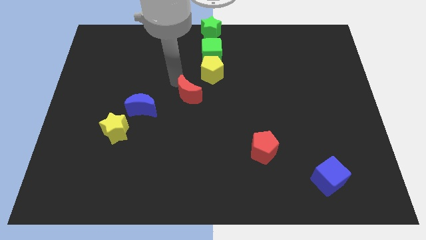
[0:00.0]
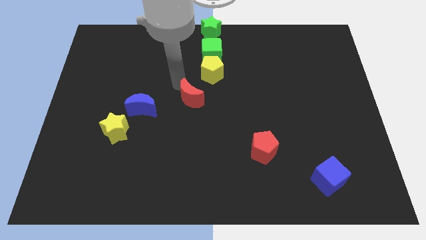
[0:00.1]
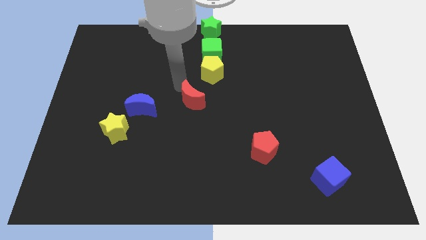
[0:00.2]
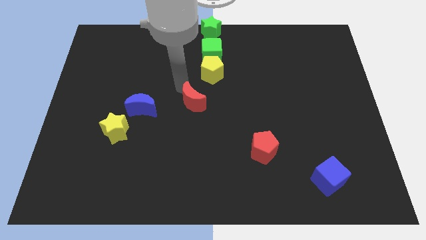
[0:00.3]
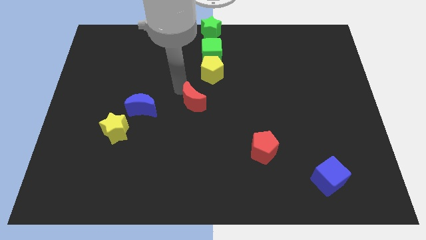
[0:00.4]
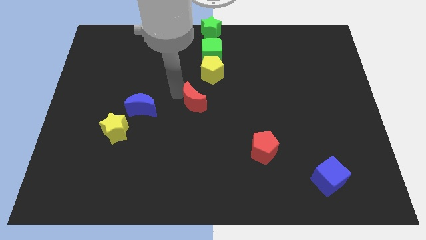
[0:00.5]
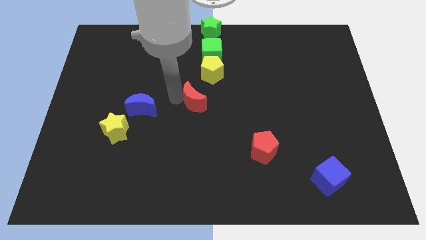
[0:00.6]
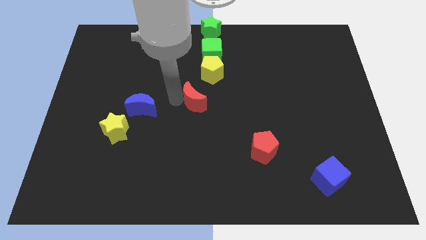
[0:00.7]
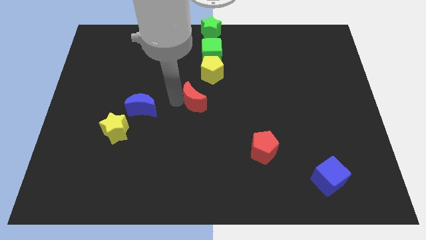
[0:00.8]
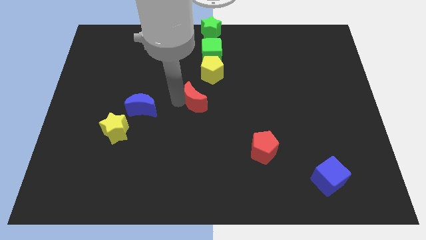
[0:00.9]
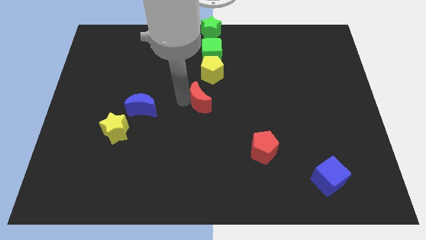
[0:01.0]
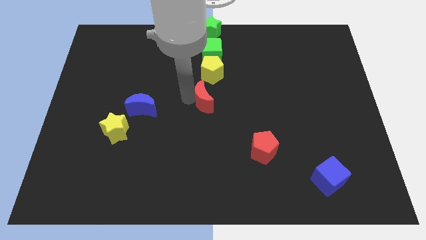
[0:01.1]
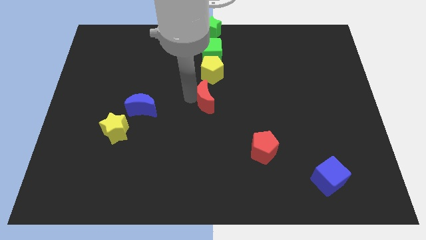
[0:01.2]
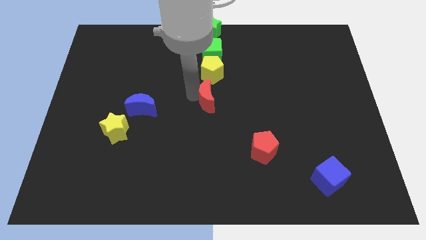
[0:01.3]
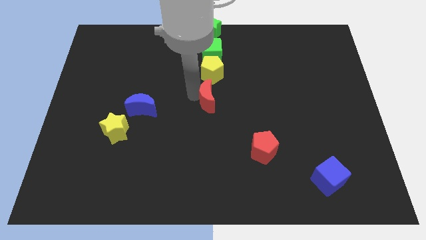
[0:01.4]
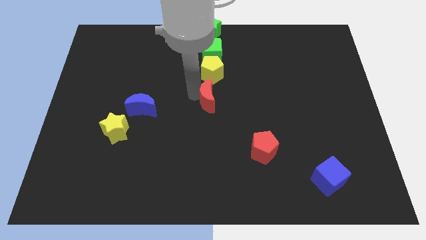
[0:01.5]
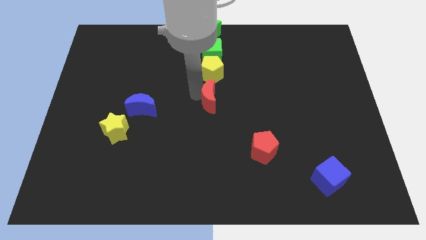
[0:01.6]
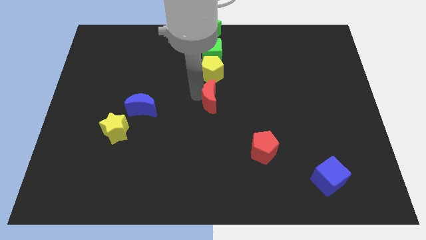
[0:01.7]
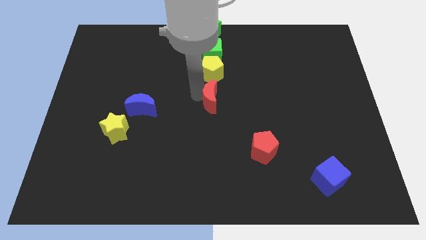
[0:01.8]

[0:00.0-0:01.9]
put the red moon underneath the yellow pentagon

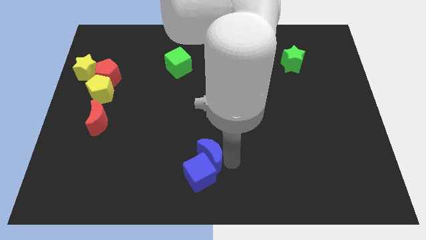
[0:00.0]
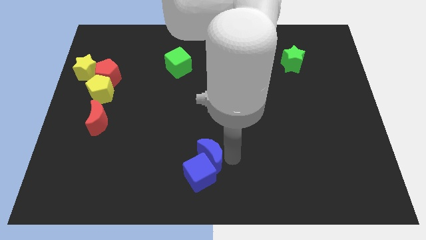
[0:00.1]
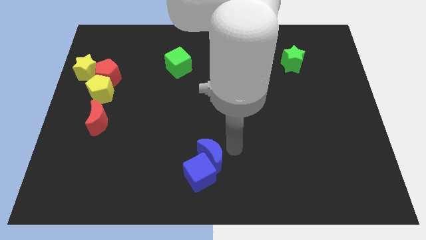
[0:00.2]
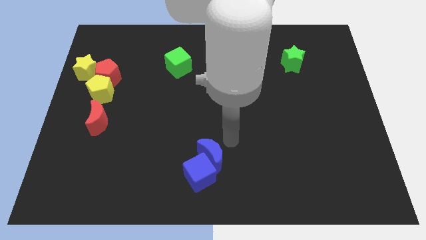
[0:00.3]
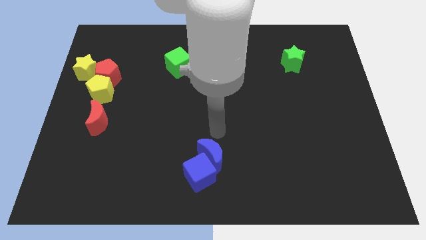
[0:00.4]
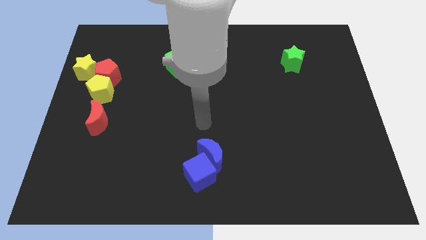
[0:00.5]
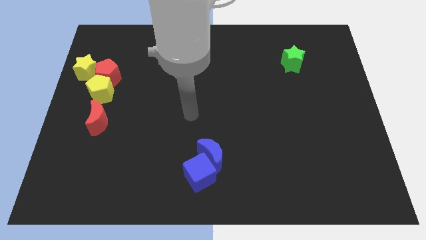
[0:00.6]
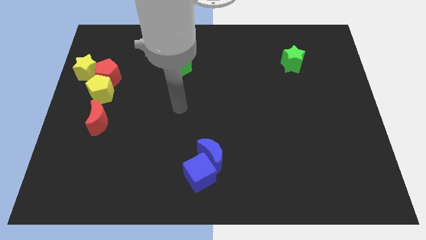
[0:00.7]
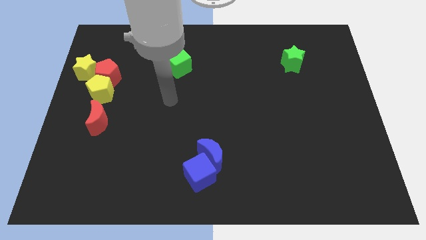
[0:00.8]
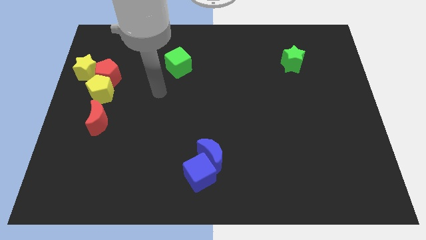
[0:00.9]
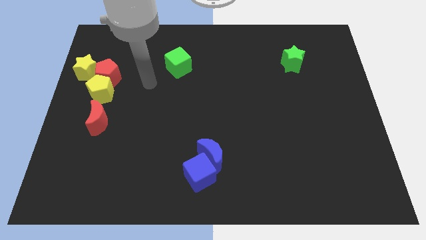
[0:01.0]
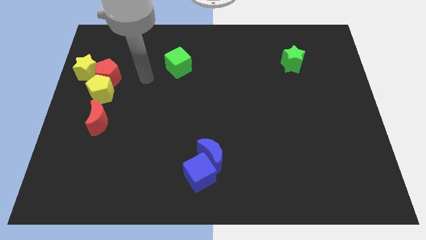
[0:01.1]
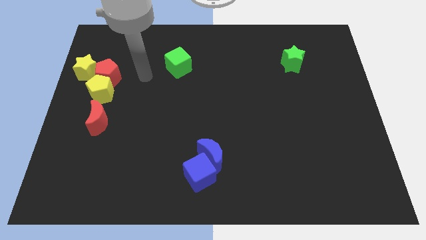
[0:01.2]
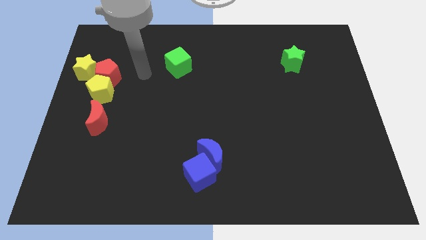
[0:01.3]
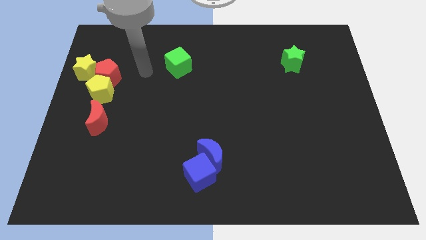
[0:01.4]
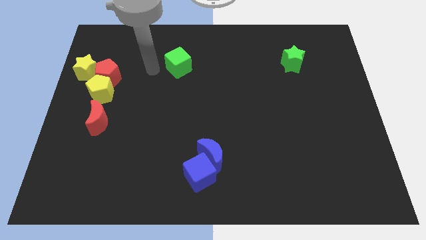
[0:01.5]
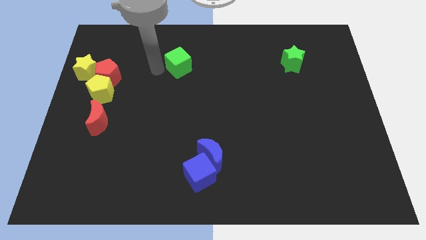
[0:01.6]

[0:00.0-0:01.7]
move your arm towards the green square

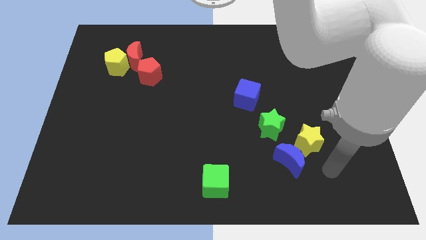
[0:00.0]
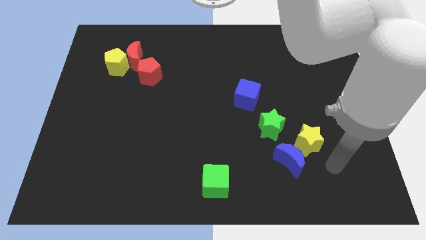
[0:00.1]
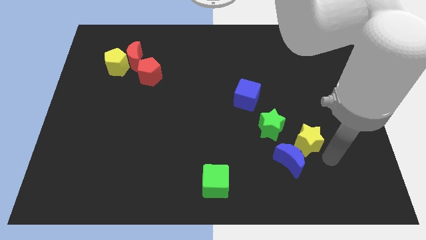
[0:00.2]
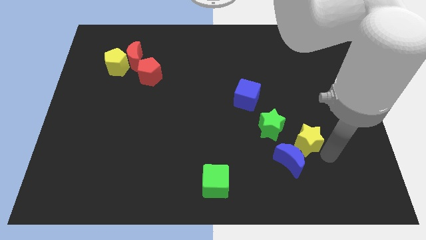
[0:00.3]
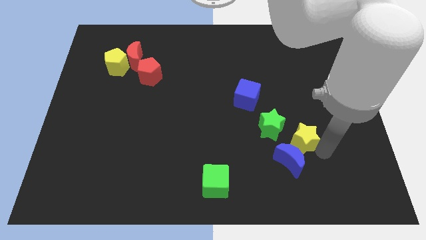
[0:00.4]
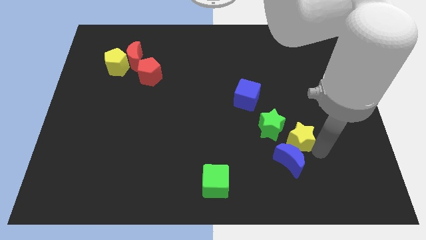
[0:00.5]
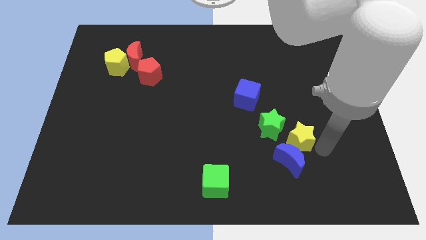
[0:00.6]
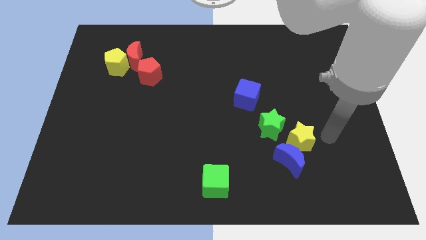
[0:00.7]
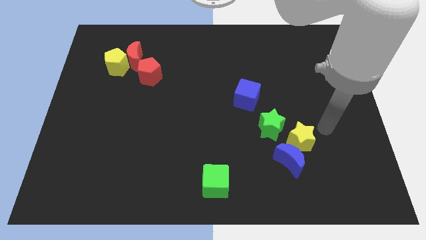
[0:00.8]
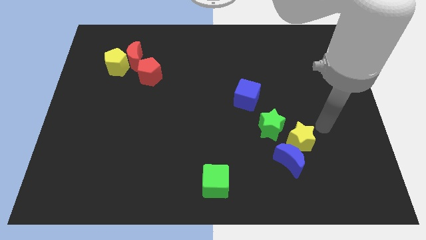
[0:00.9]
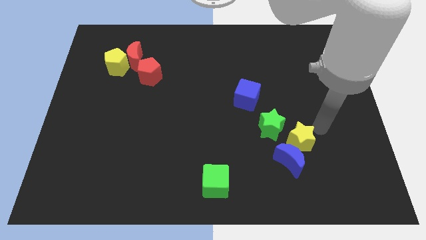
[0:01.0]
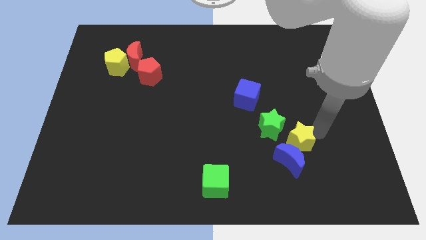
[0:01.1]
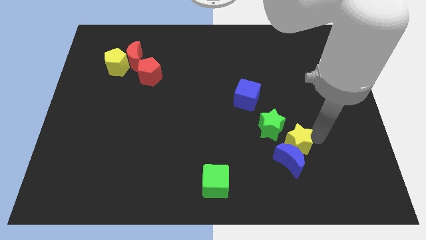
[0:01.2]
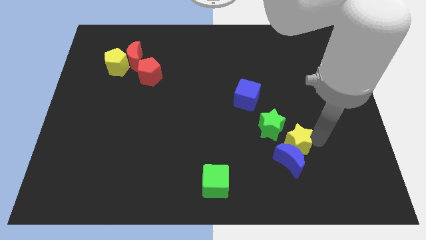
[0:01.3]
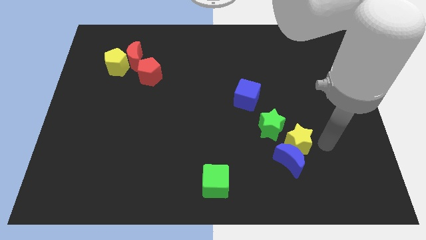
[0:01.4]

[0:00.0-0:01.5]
move yellow star into blue moon

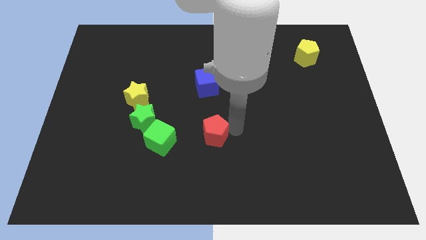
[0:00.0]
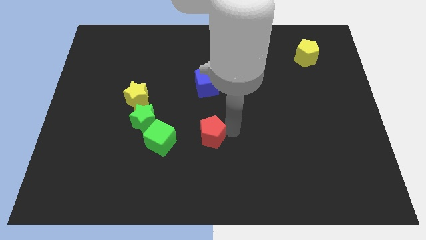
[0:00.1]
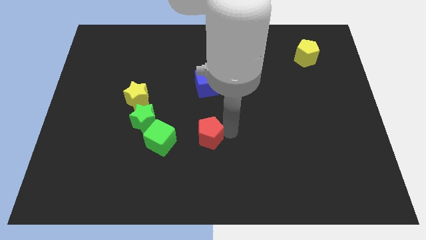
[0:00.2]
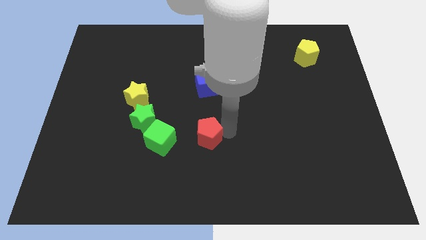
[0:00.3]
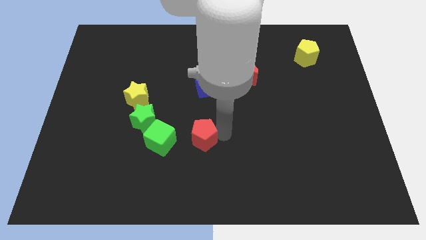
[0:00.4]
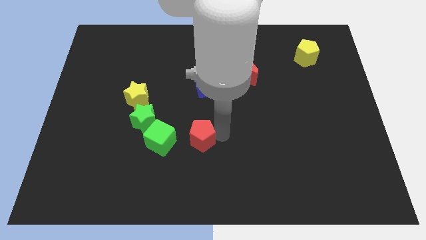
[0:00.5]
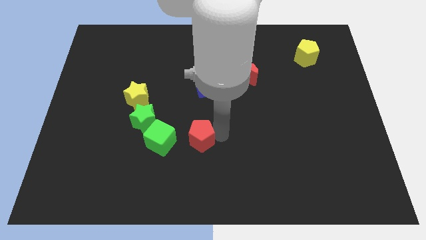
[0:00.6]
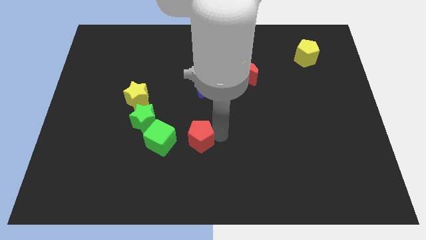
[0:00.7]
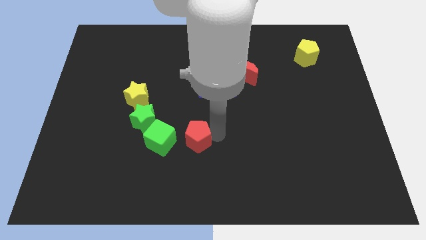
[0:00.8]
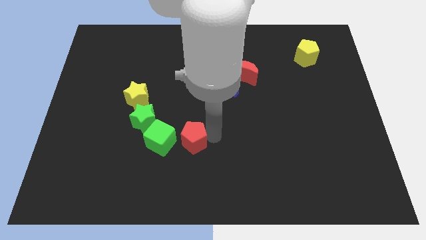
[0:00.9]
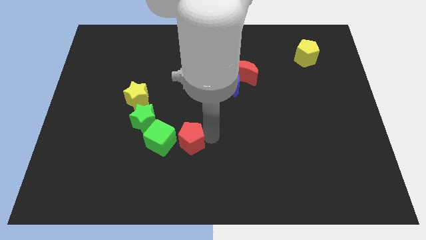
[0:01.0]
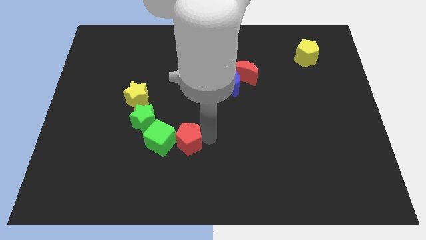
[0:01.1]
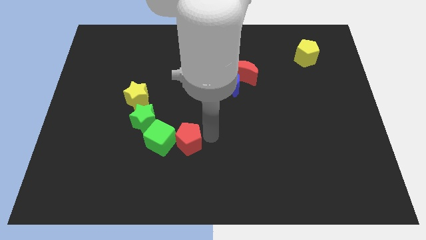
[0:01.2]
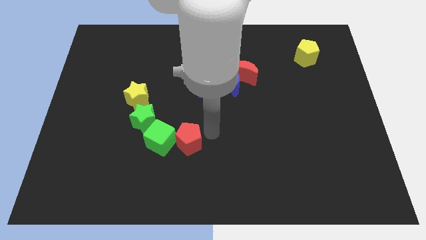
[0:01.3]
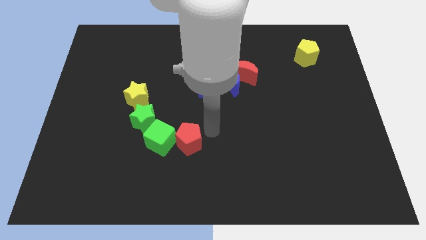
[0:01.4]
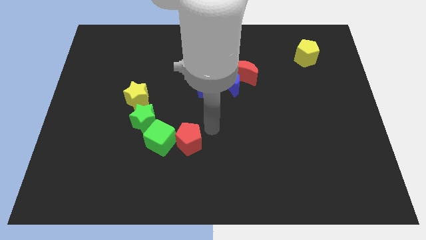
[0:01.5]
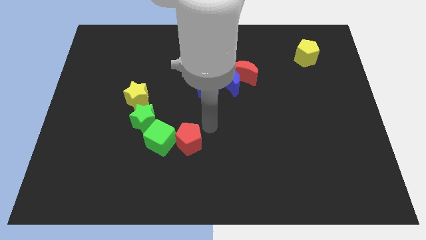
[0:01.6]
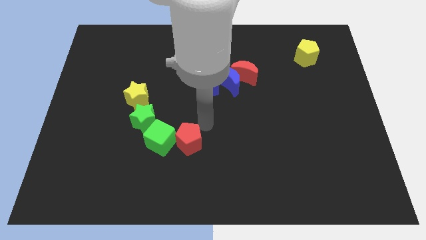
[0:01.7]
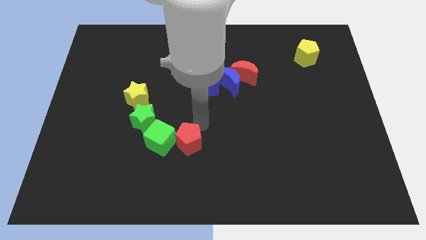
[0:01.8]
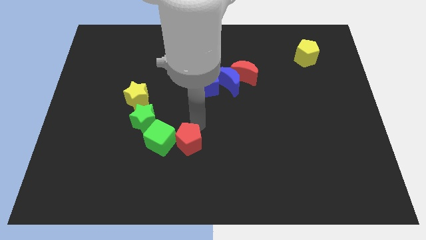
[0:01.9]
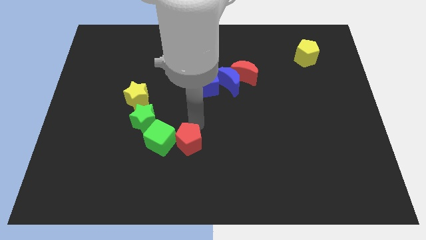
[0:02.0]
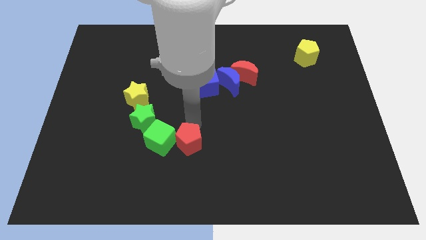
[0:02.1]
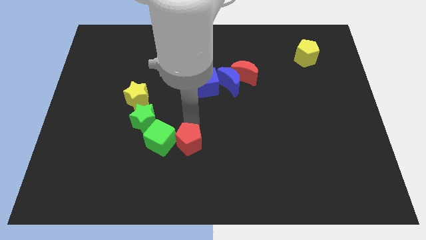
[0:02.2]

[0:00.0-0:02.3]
place the red pentagon to the right of the green cube

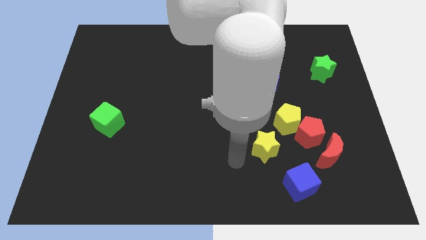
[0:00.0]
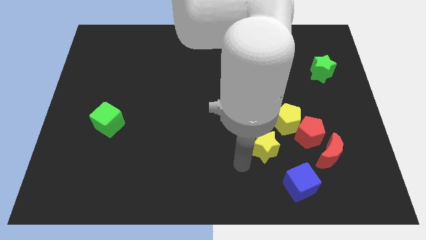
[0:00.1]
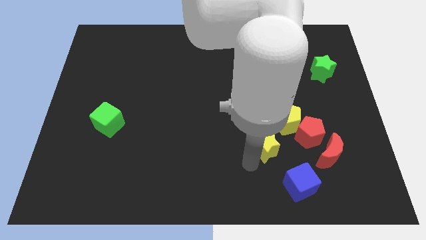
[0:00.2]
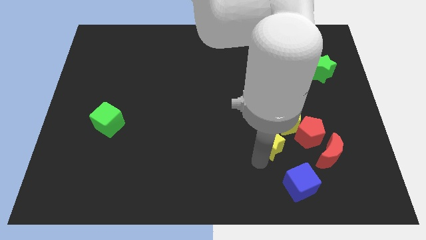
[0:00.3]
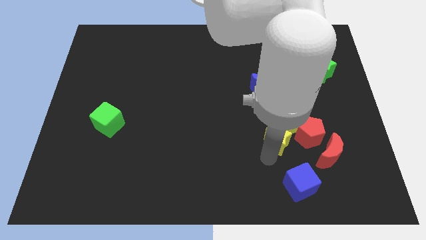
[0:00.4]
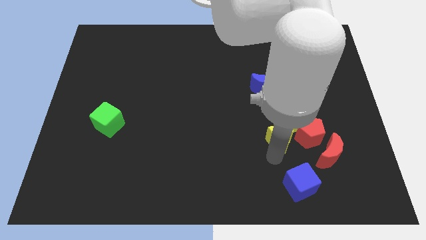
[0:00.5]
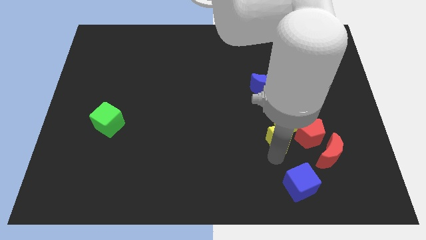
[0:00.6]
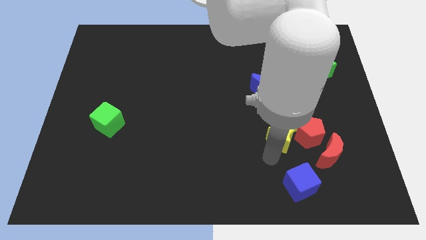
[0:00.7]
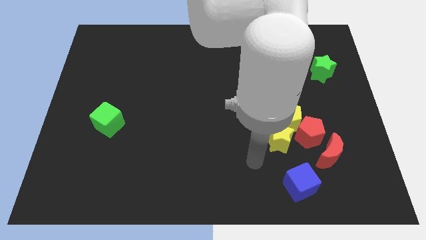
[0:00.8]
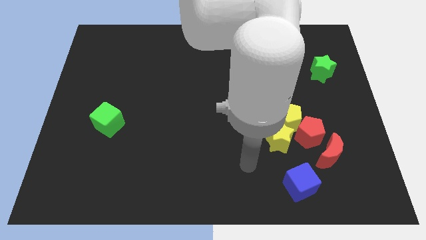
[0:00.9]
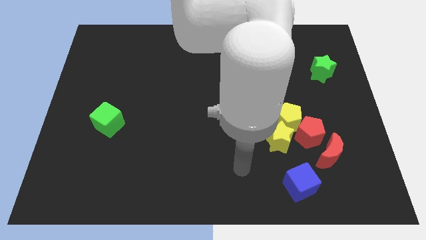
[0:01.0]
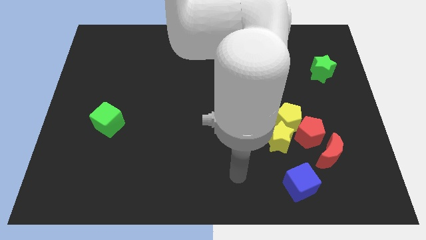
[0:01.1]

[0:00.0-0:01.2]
move yellow star near yellow pentagon

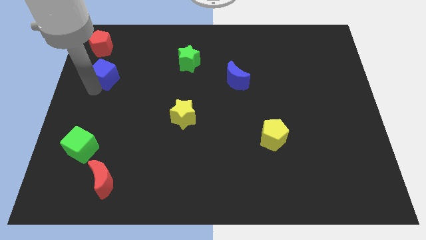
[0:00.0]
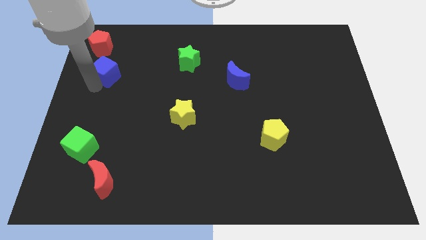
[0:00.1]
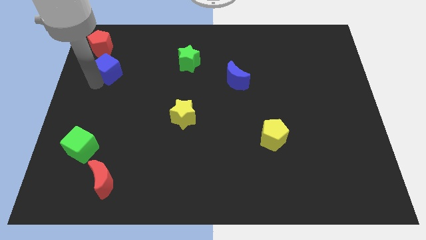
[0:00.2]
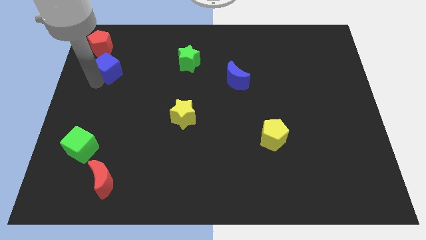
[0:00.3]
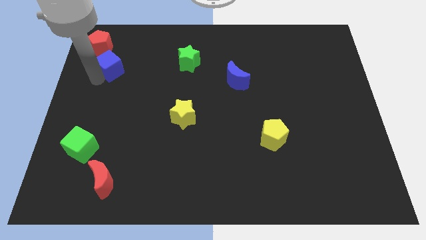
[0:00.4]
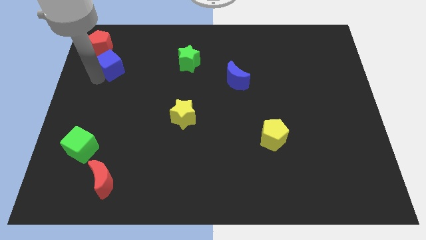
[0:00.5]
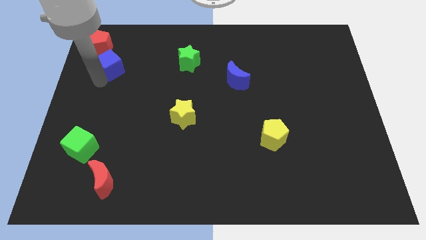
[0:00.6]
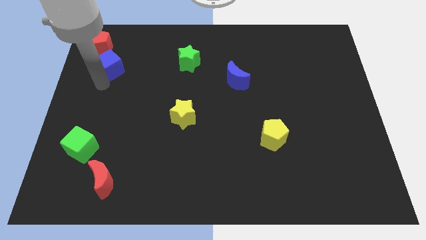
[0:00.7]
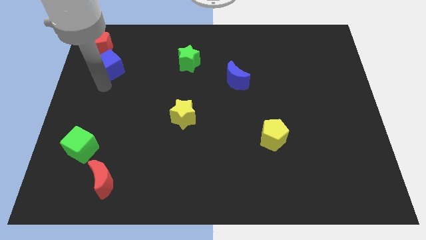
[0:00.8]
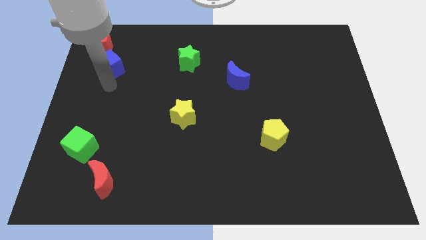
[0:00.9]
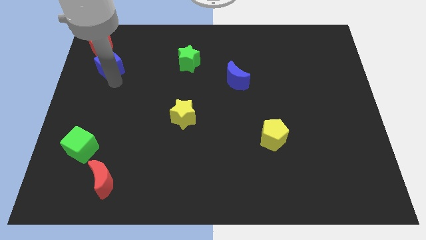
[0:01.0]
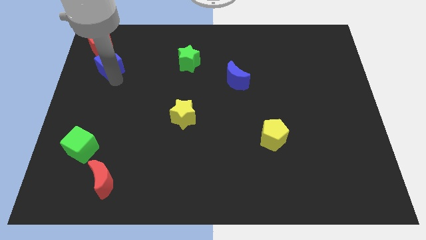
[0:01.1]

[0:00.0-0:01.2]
move the blue cube below the red pentagon
